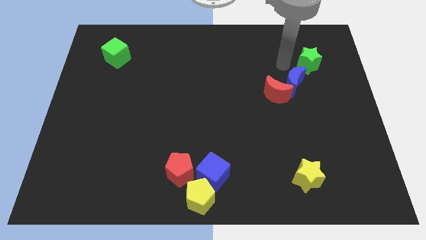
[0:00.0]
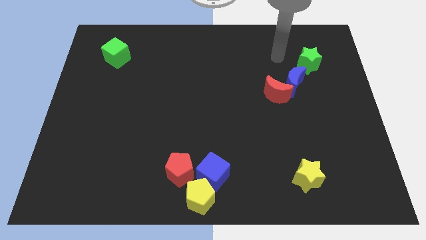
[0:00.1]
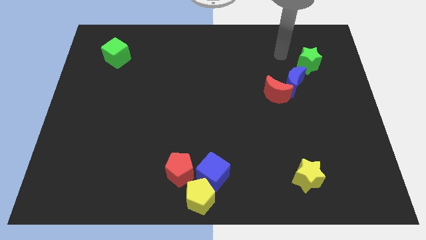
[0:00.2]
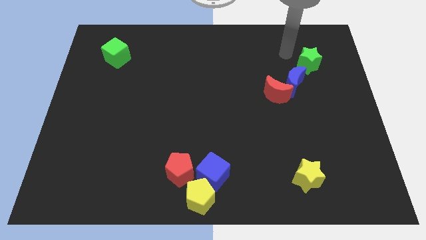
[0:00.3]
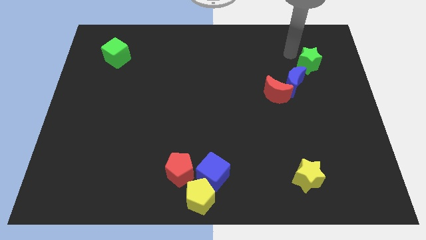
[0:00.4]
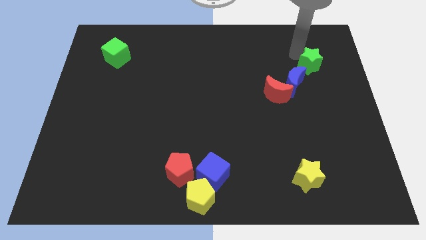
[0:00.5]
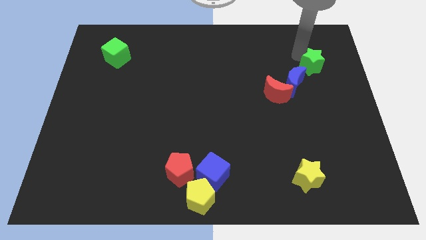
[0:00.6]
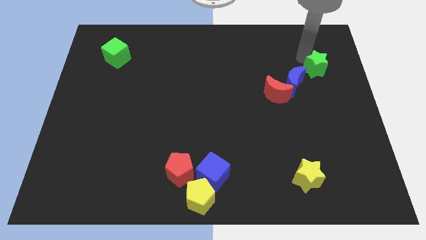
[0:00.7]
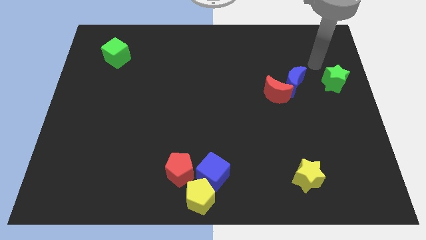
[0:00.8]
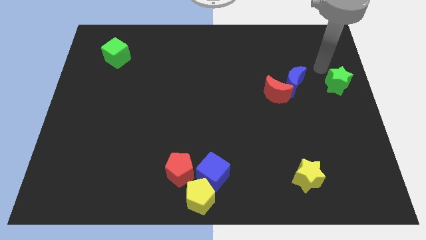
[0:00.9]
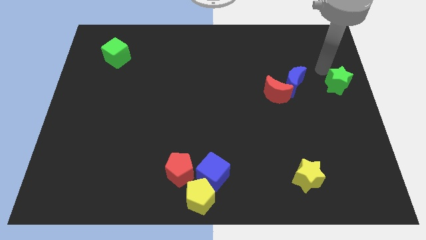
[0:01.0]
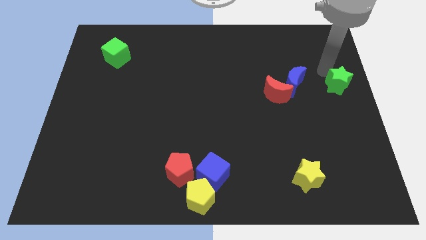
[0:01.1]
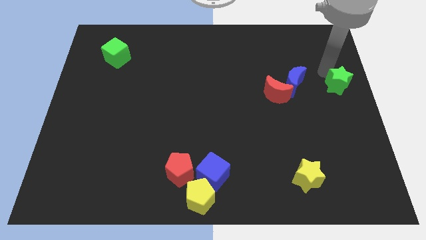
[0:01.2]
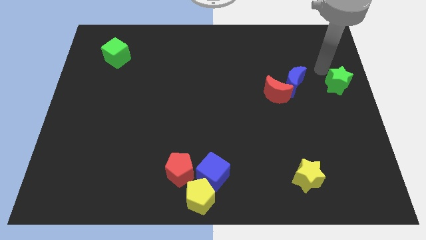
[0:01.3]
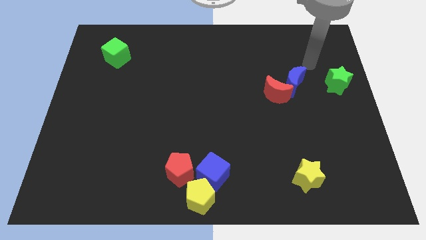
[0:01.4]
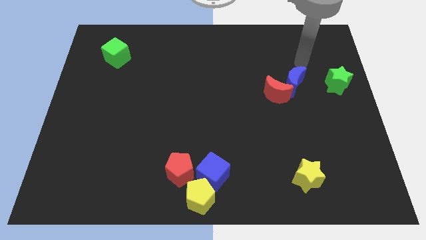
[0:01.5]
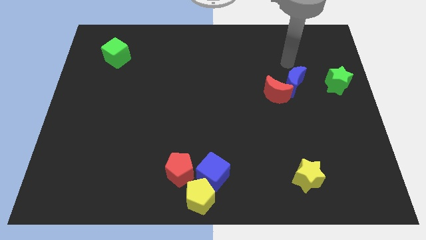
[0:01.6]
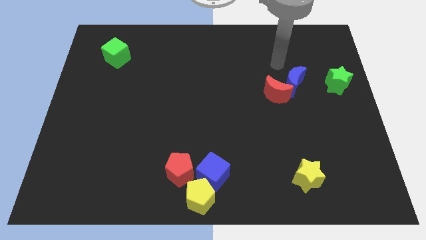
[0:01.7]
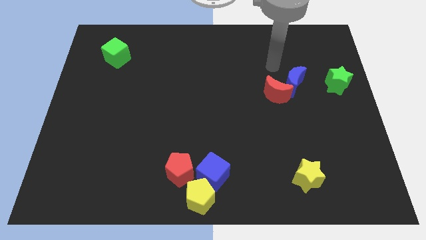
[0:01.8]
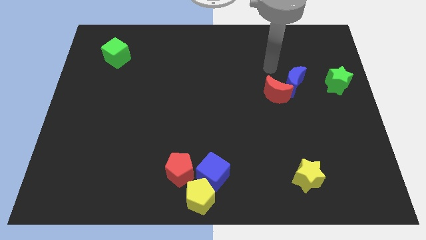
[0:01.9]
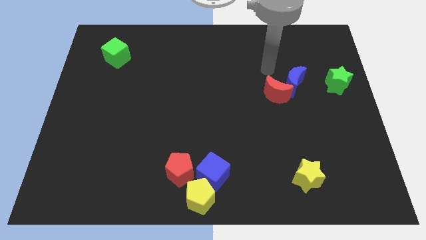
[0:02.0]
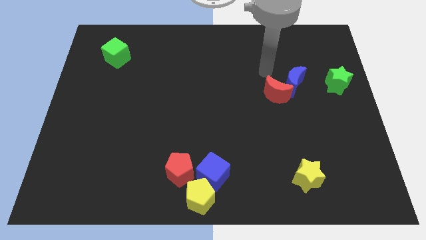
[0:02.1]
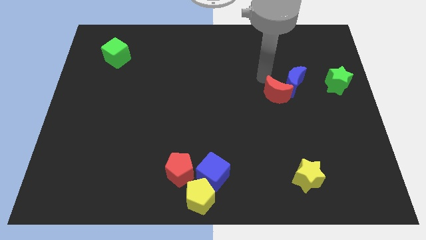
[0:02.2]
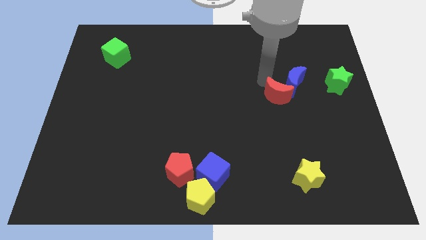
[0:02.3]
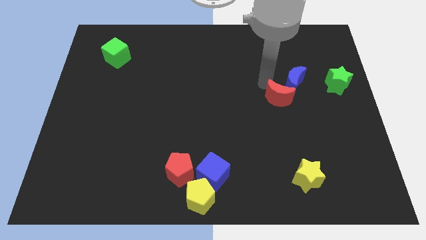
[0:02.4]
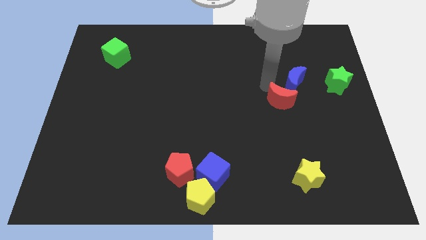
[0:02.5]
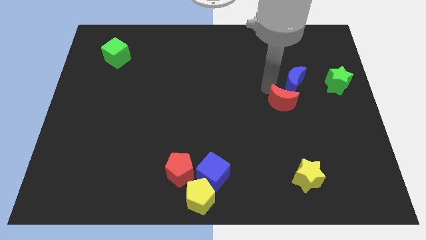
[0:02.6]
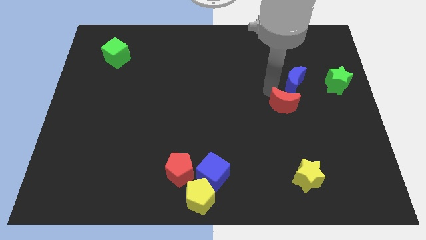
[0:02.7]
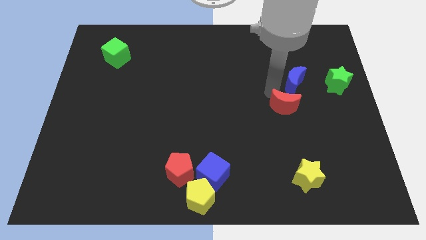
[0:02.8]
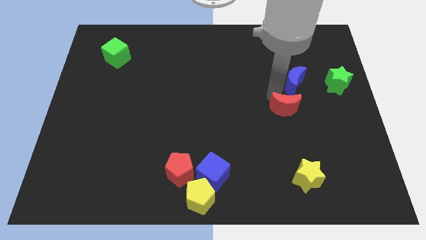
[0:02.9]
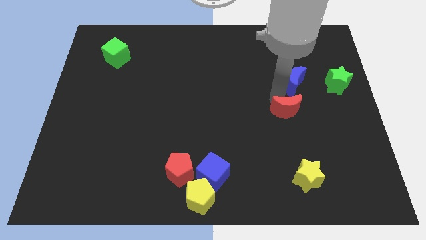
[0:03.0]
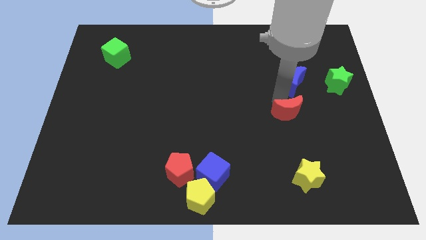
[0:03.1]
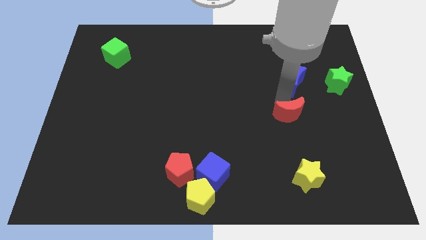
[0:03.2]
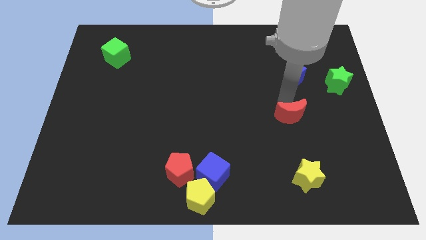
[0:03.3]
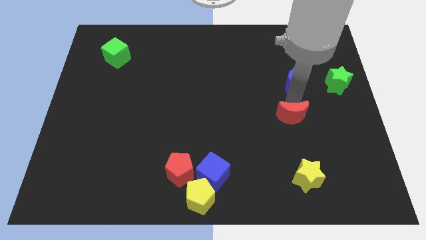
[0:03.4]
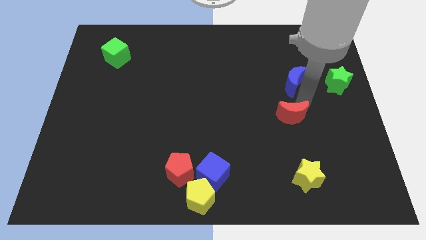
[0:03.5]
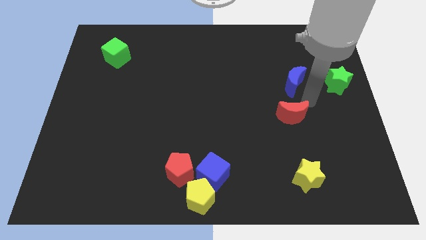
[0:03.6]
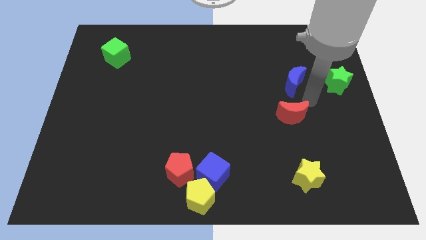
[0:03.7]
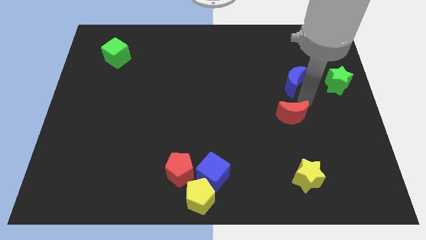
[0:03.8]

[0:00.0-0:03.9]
separate the green star and the red crescent from the blue crescent

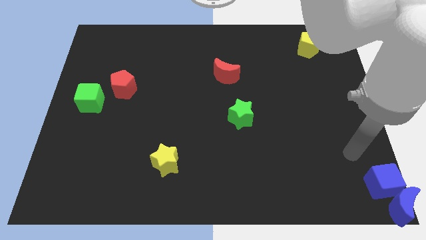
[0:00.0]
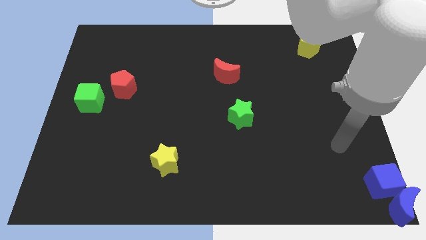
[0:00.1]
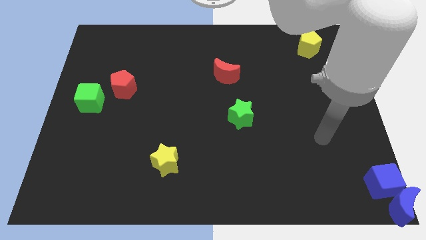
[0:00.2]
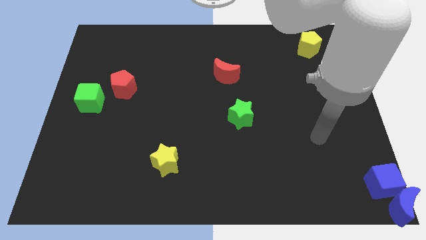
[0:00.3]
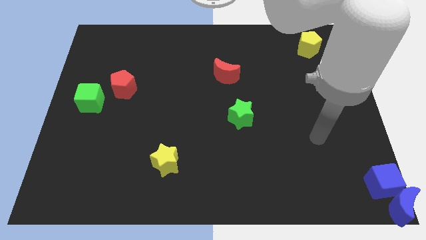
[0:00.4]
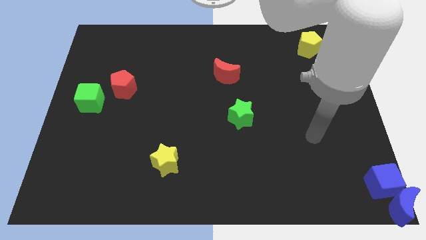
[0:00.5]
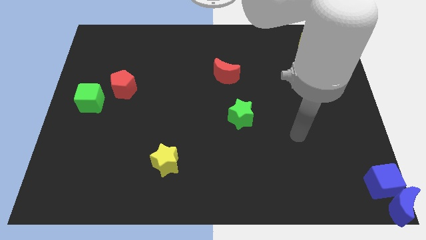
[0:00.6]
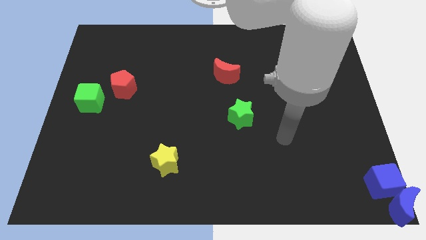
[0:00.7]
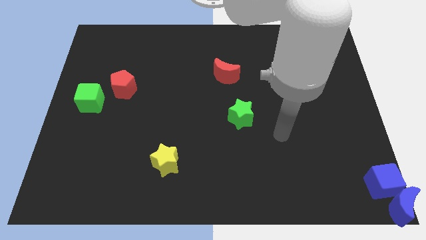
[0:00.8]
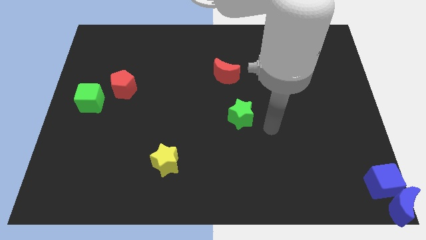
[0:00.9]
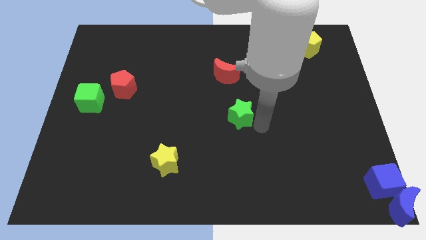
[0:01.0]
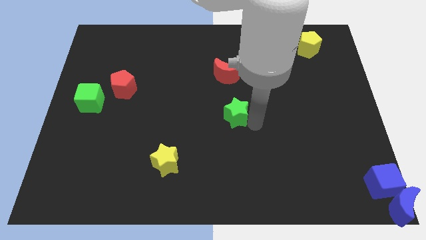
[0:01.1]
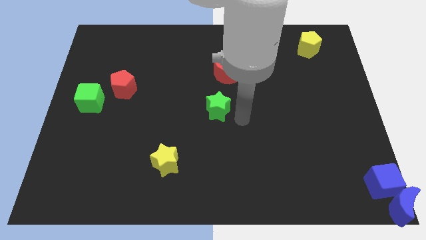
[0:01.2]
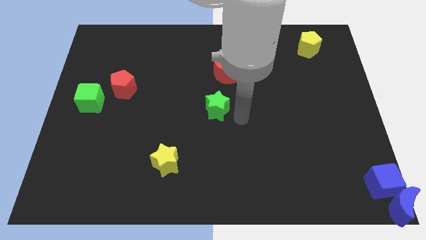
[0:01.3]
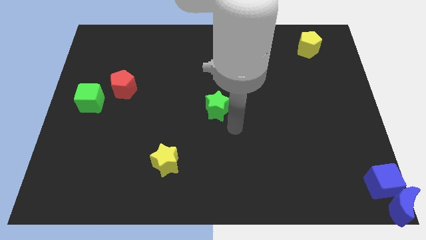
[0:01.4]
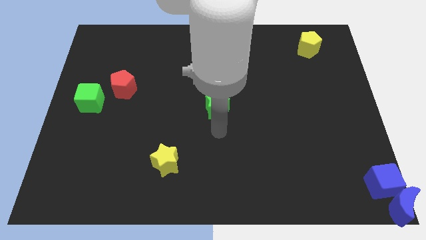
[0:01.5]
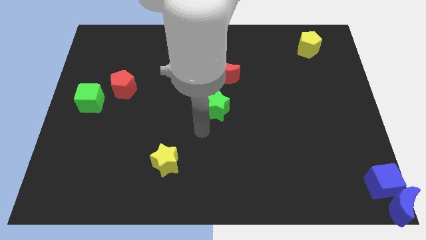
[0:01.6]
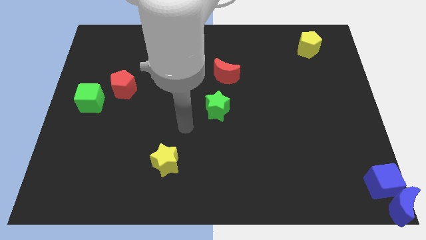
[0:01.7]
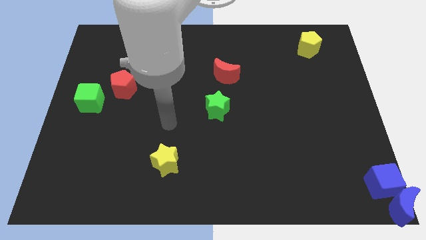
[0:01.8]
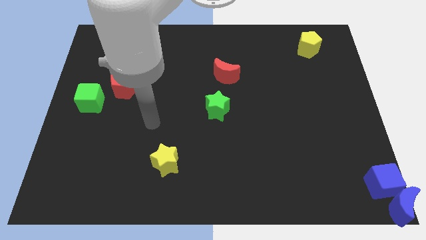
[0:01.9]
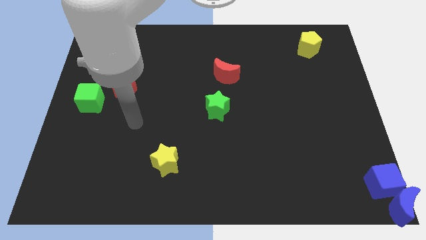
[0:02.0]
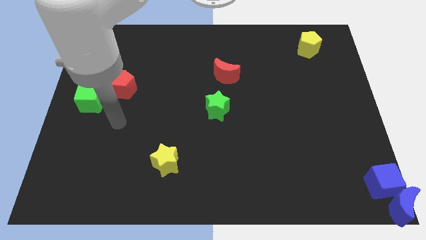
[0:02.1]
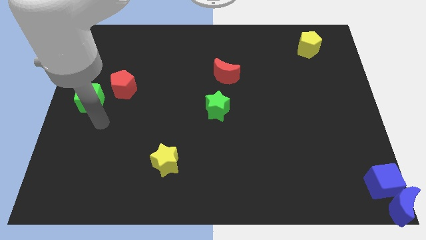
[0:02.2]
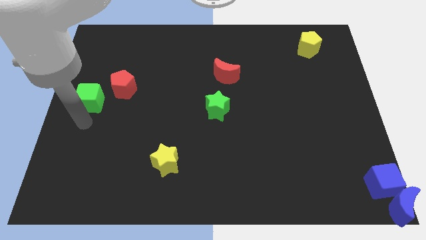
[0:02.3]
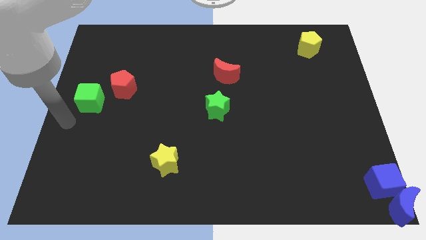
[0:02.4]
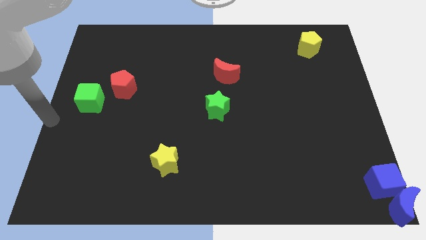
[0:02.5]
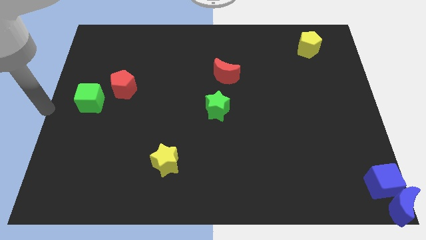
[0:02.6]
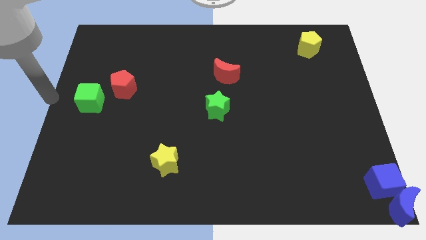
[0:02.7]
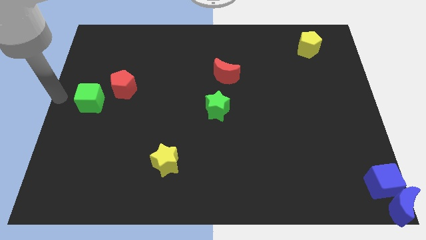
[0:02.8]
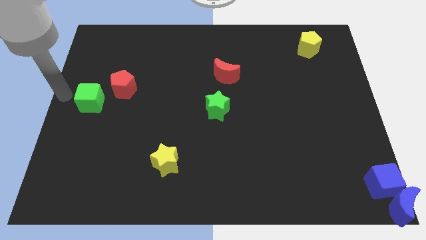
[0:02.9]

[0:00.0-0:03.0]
move greens star to the center of the board

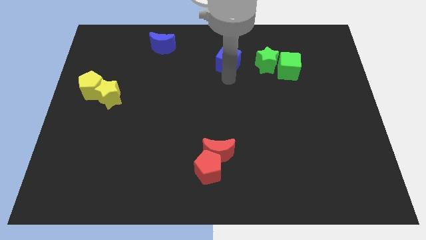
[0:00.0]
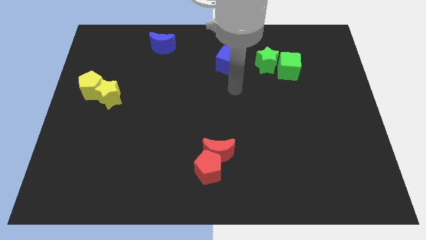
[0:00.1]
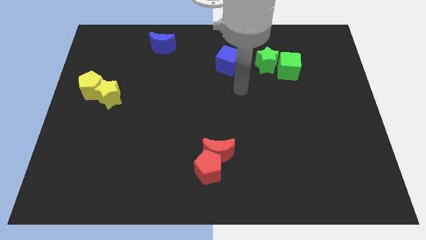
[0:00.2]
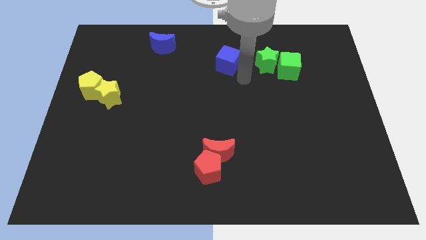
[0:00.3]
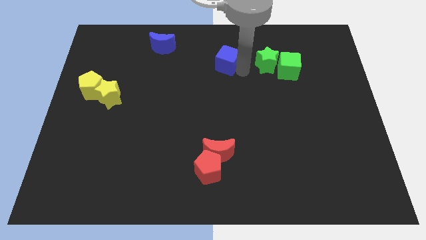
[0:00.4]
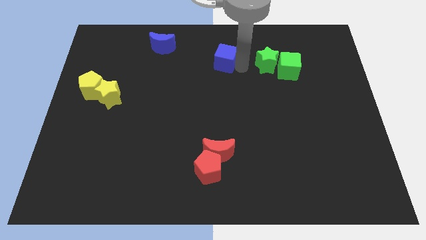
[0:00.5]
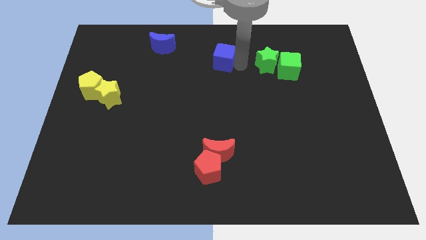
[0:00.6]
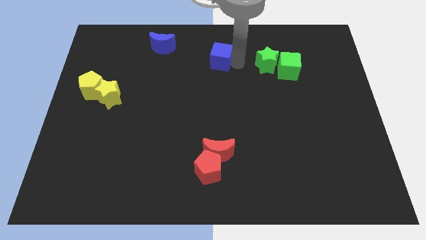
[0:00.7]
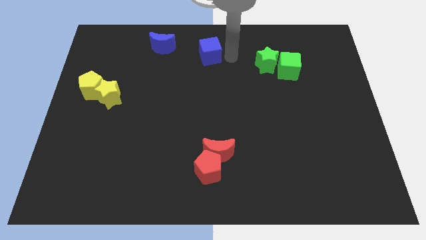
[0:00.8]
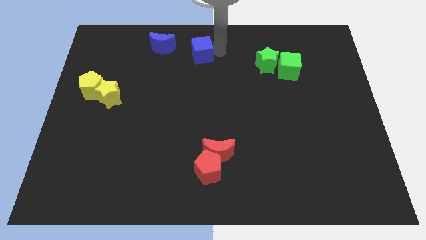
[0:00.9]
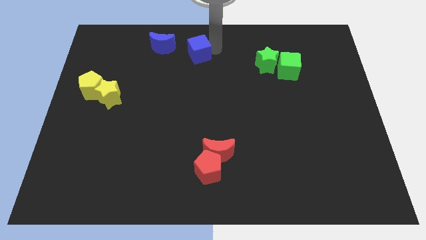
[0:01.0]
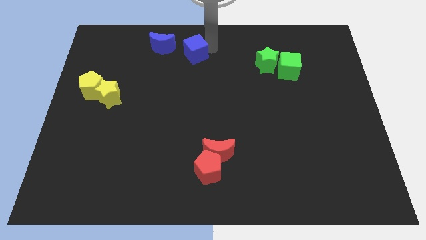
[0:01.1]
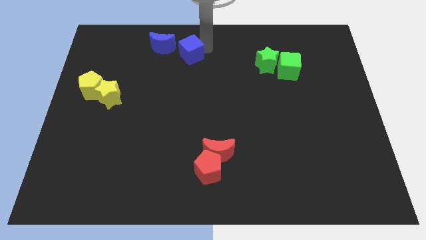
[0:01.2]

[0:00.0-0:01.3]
slide the blue cube towards the right side of the blue moon

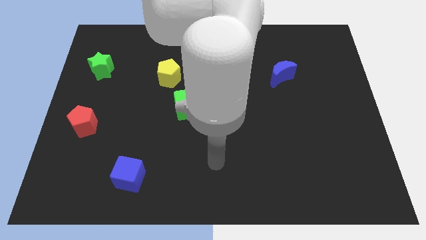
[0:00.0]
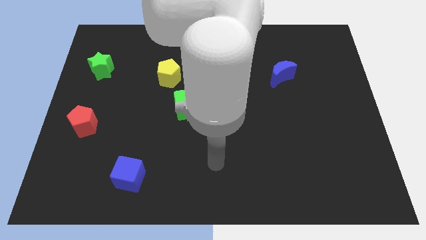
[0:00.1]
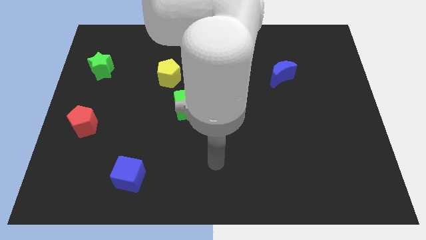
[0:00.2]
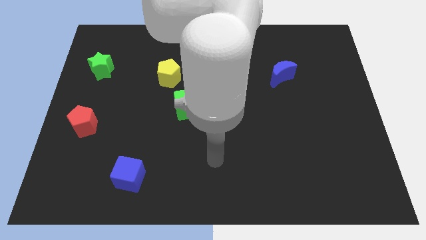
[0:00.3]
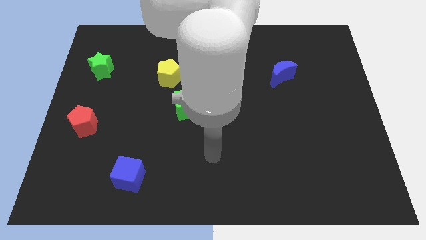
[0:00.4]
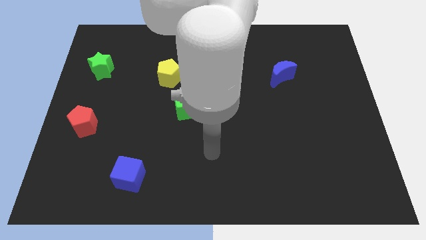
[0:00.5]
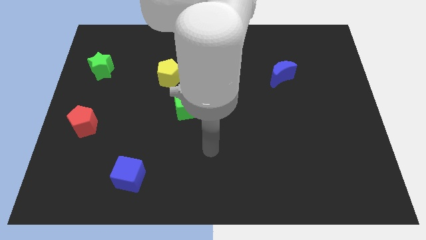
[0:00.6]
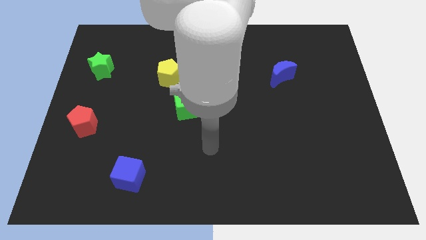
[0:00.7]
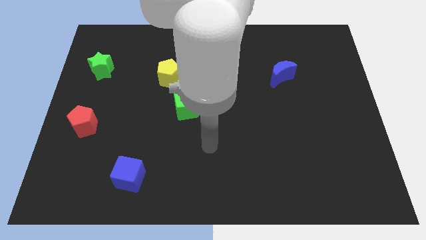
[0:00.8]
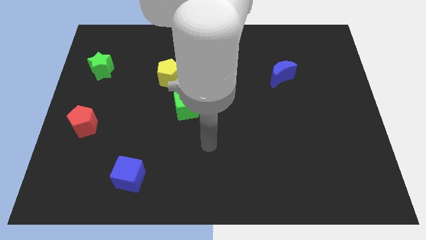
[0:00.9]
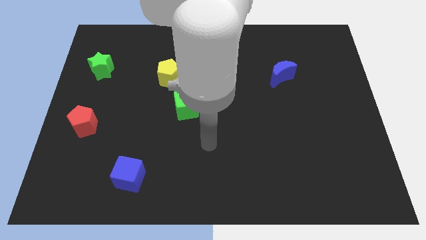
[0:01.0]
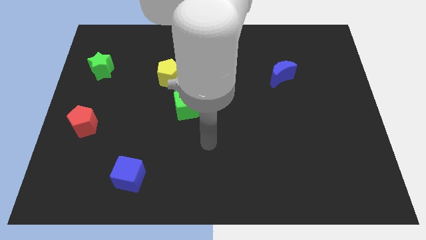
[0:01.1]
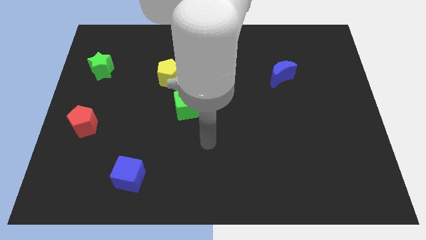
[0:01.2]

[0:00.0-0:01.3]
move your hand slightly up
